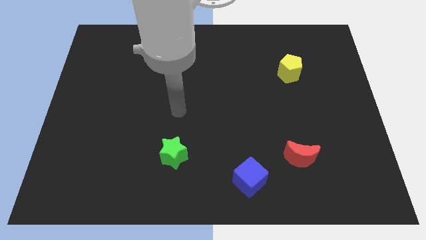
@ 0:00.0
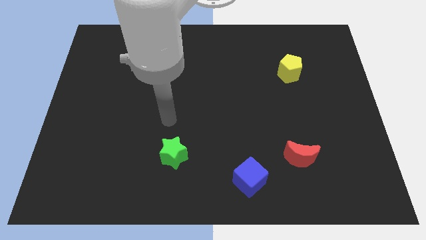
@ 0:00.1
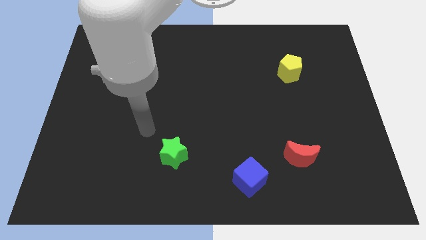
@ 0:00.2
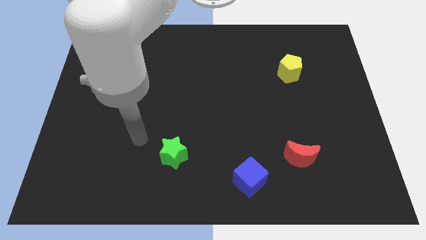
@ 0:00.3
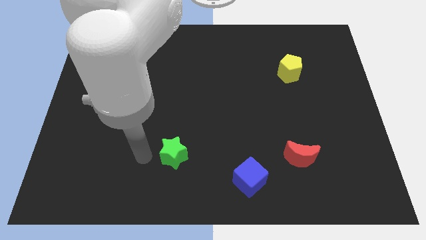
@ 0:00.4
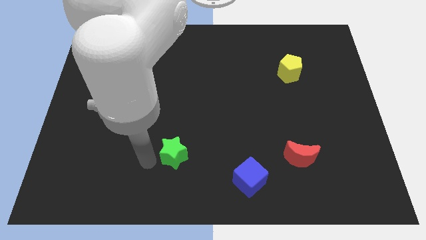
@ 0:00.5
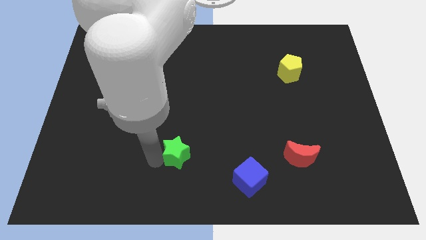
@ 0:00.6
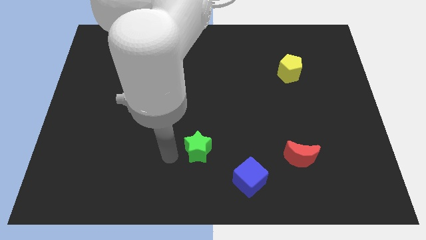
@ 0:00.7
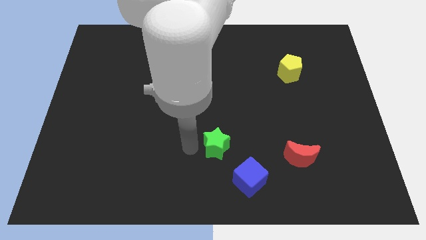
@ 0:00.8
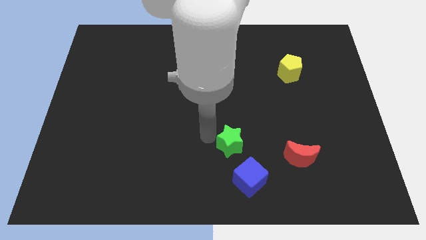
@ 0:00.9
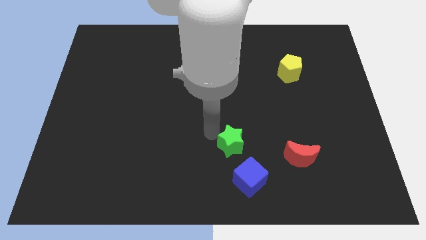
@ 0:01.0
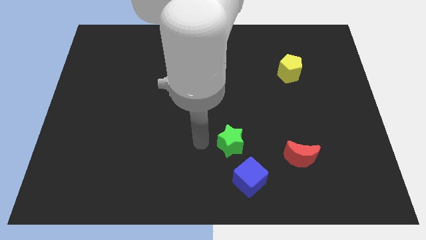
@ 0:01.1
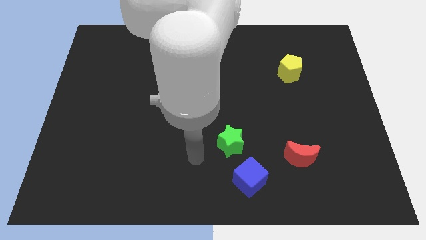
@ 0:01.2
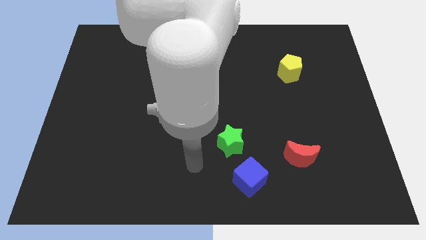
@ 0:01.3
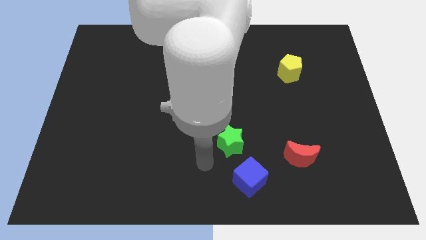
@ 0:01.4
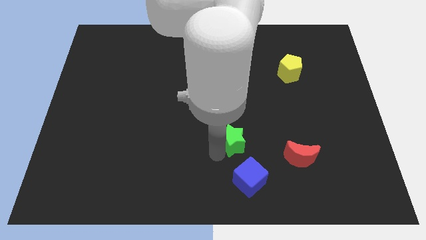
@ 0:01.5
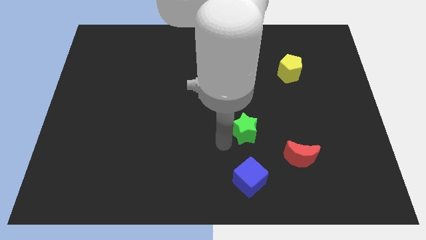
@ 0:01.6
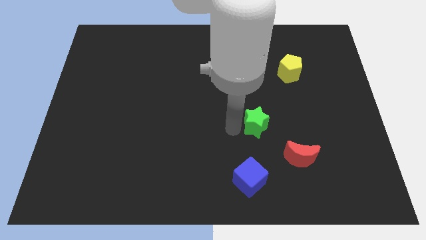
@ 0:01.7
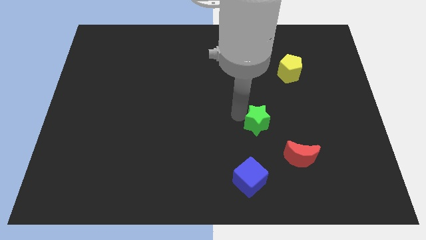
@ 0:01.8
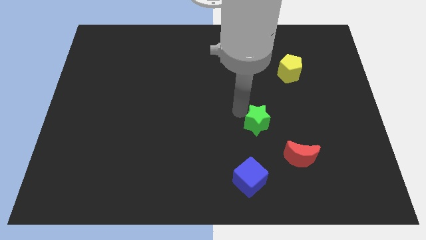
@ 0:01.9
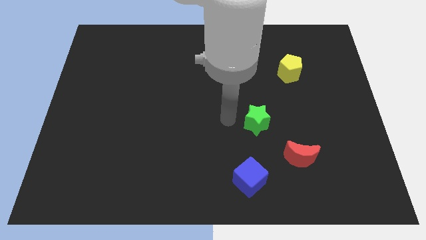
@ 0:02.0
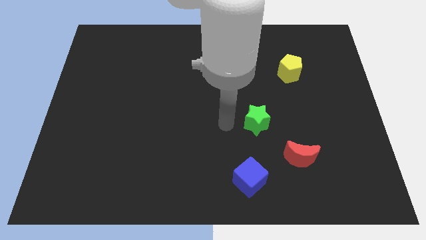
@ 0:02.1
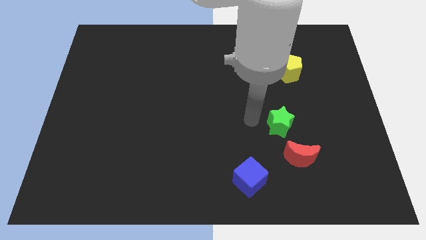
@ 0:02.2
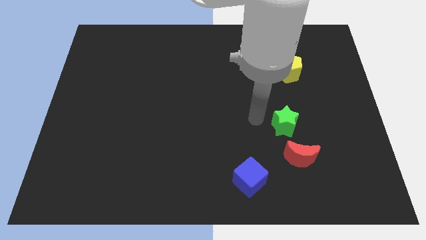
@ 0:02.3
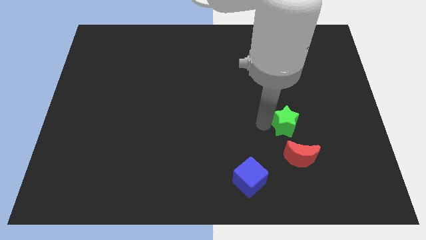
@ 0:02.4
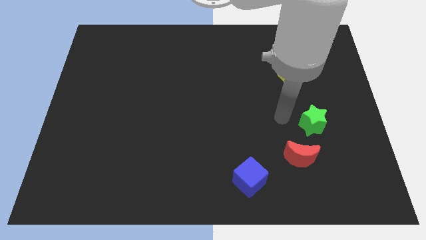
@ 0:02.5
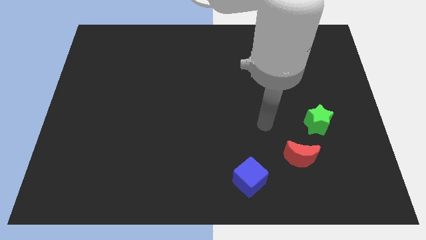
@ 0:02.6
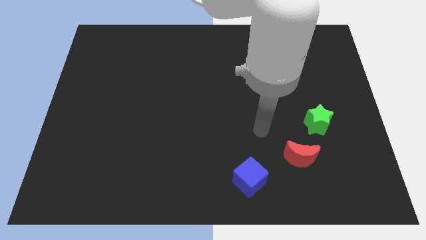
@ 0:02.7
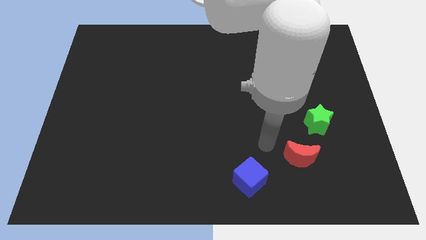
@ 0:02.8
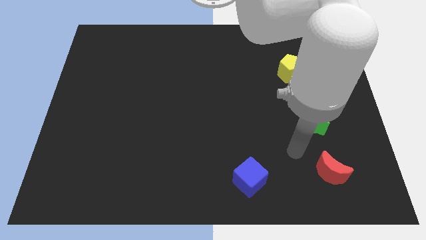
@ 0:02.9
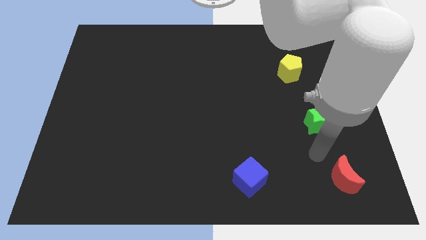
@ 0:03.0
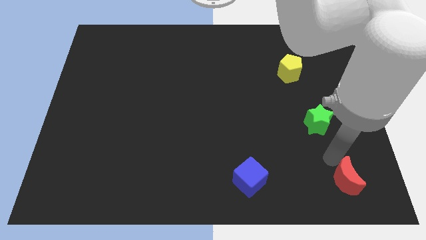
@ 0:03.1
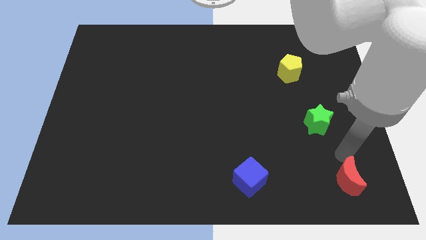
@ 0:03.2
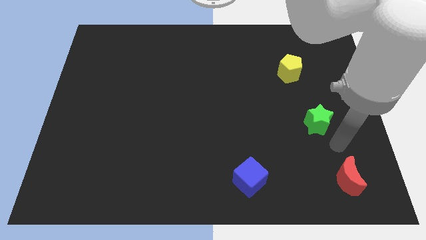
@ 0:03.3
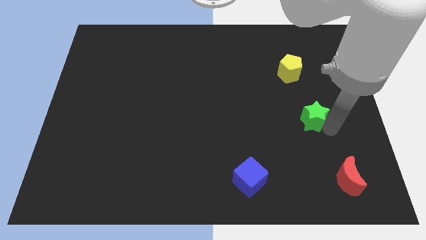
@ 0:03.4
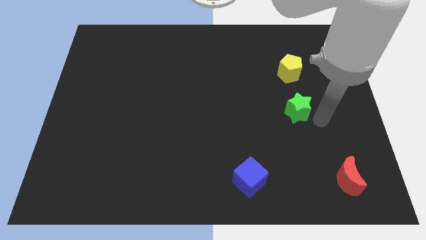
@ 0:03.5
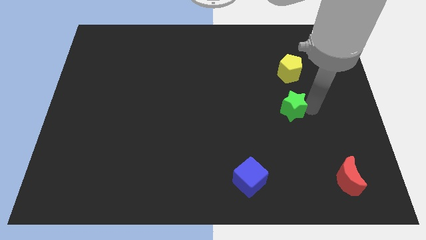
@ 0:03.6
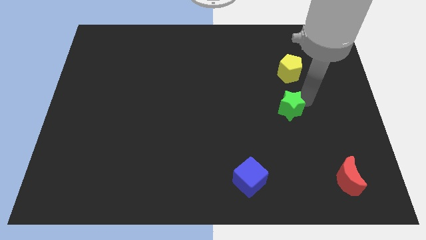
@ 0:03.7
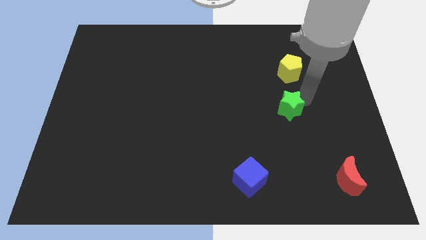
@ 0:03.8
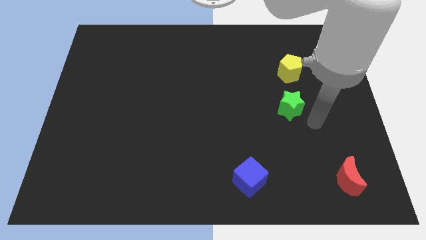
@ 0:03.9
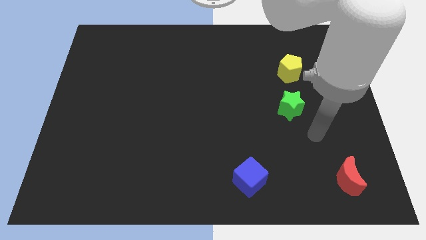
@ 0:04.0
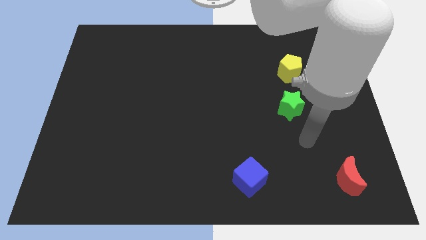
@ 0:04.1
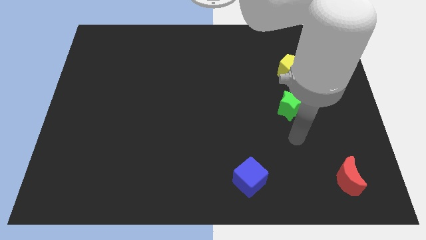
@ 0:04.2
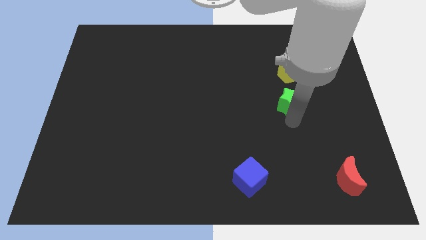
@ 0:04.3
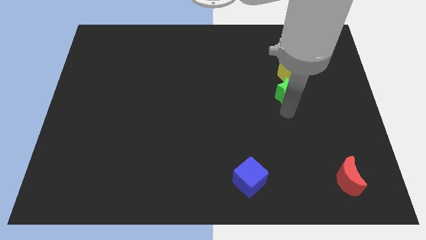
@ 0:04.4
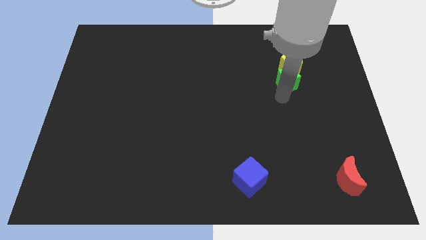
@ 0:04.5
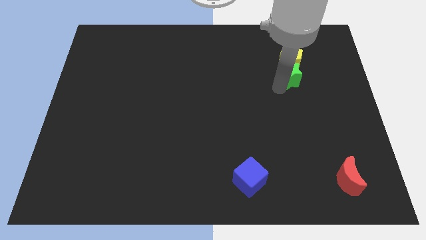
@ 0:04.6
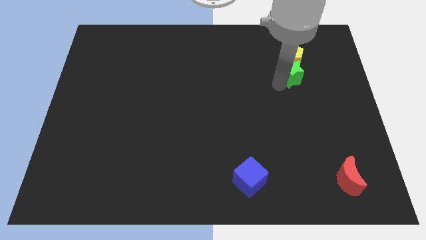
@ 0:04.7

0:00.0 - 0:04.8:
push the star towards the yellow block

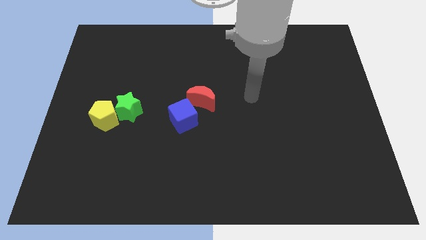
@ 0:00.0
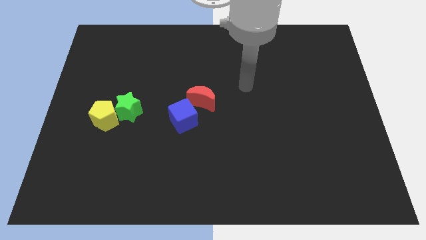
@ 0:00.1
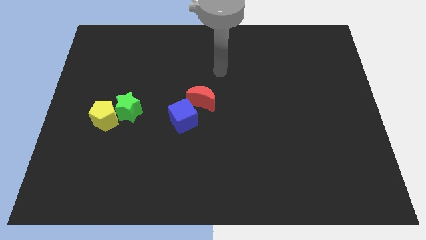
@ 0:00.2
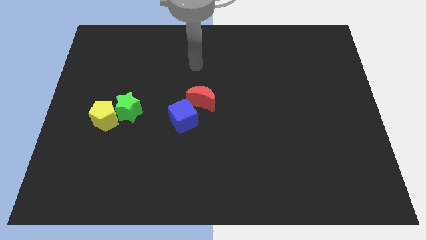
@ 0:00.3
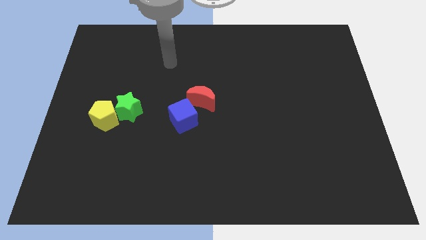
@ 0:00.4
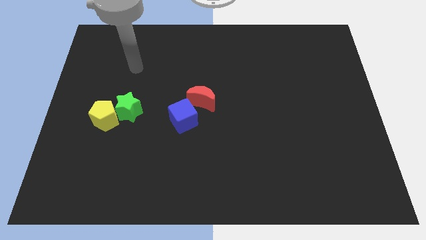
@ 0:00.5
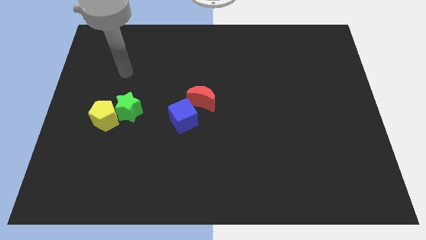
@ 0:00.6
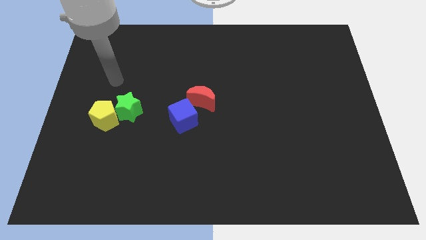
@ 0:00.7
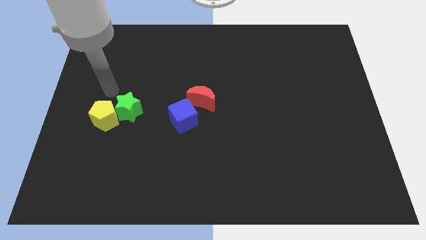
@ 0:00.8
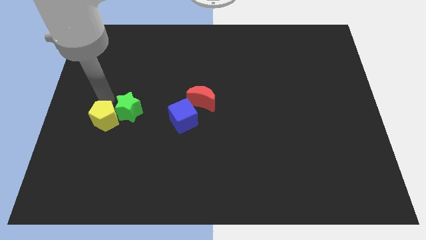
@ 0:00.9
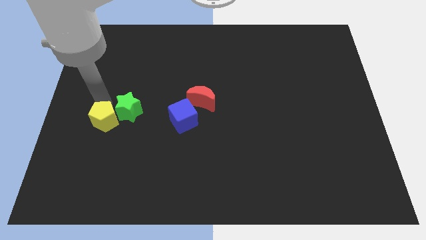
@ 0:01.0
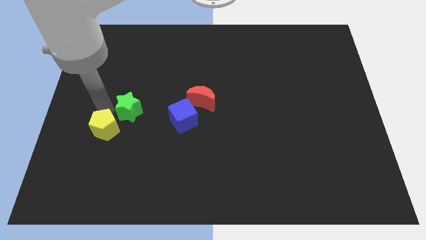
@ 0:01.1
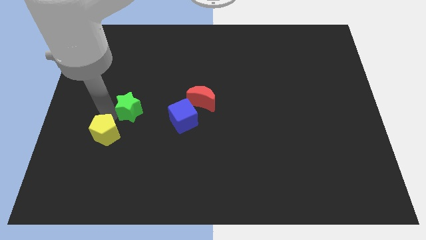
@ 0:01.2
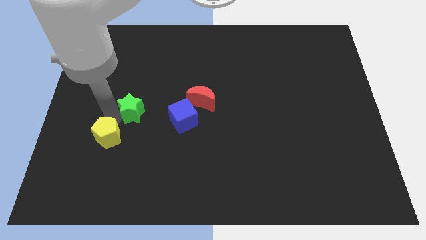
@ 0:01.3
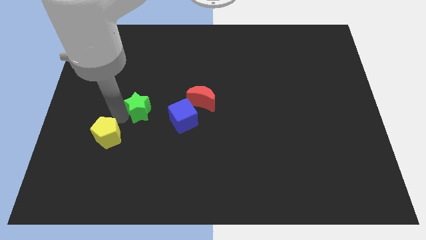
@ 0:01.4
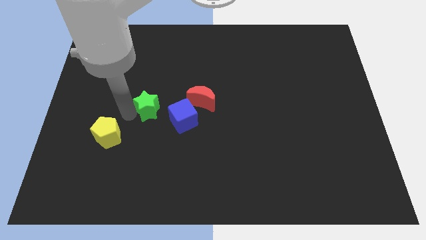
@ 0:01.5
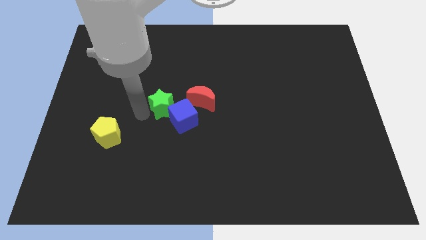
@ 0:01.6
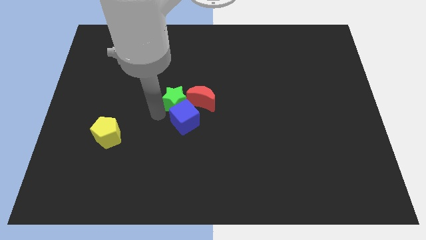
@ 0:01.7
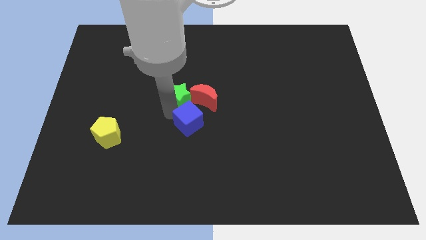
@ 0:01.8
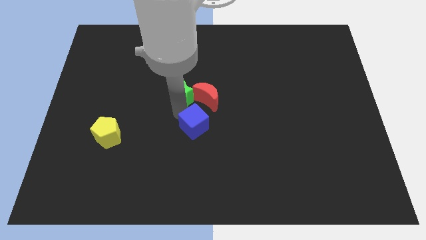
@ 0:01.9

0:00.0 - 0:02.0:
slide the star towards the moon

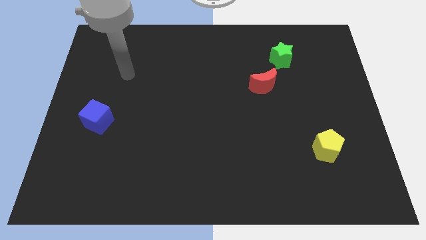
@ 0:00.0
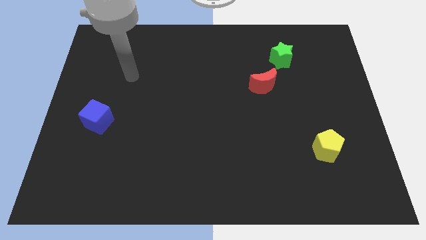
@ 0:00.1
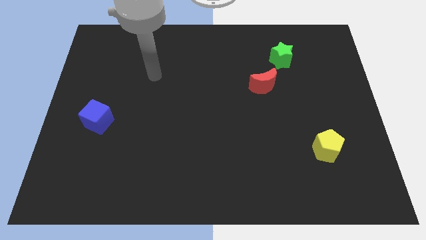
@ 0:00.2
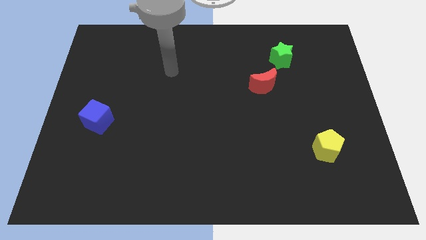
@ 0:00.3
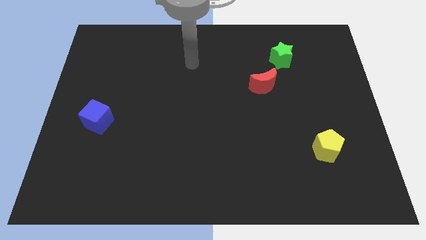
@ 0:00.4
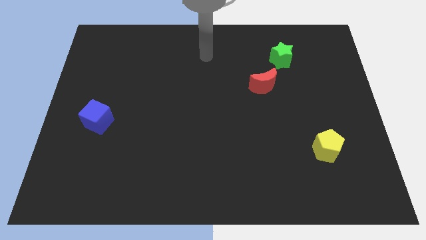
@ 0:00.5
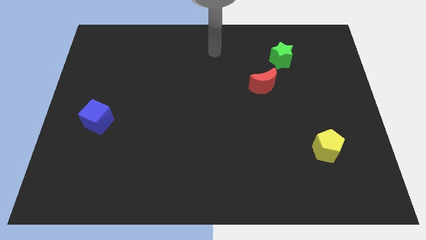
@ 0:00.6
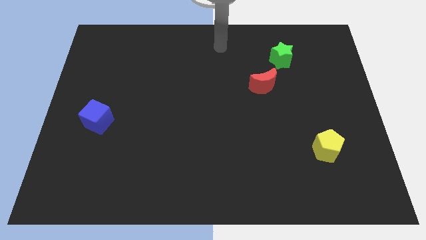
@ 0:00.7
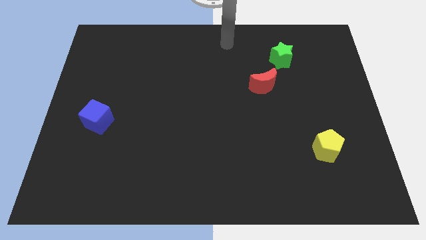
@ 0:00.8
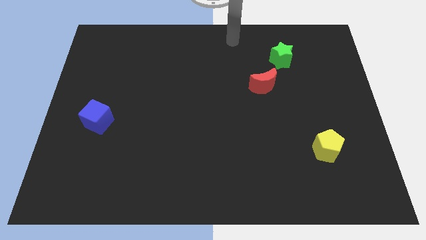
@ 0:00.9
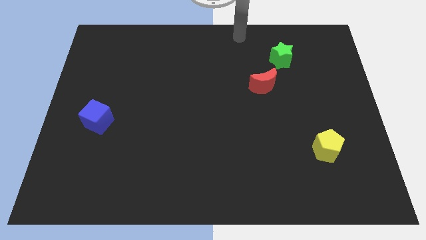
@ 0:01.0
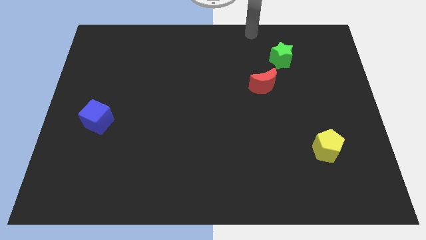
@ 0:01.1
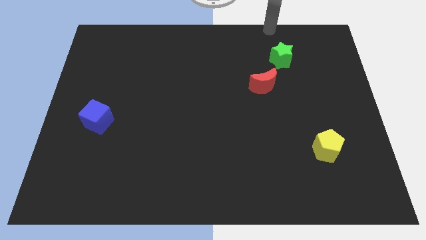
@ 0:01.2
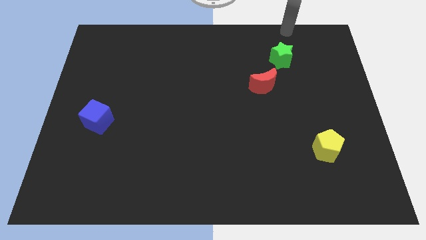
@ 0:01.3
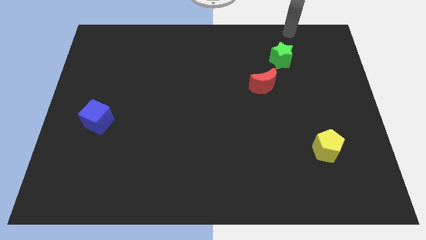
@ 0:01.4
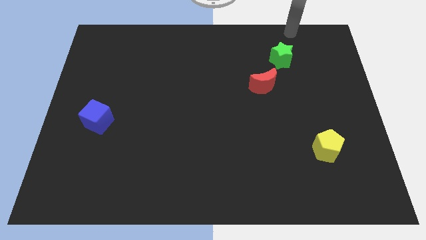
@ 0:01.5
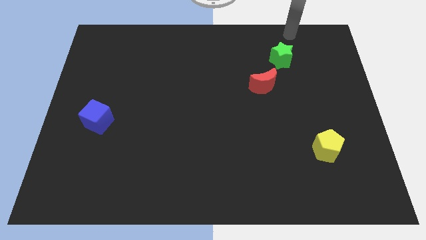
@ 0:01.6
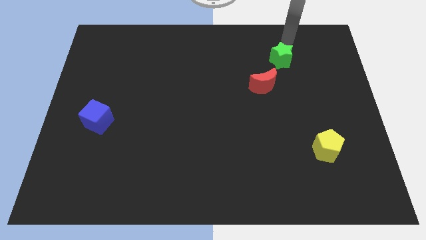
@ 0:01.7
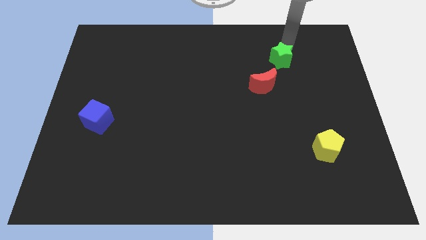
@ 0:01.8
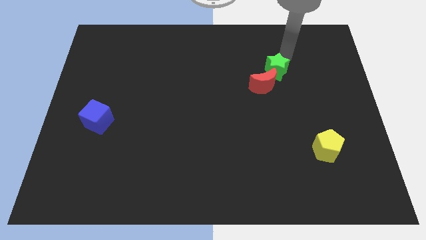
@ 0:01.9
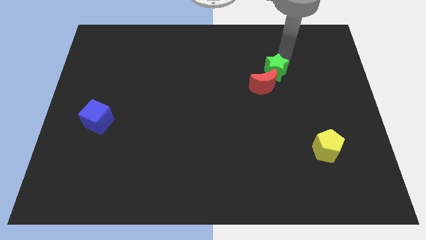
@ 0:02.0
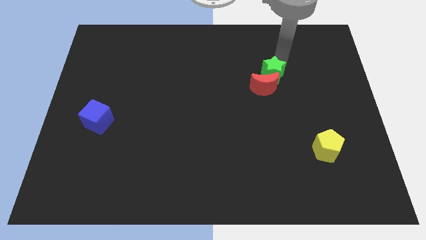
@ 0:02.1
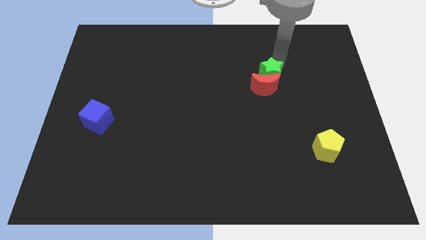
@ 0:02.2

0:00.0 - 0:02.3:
move the star close to the red block
